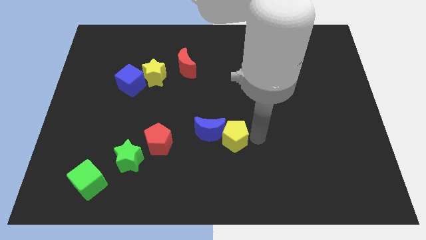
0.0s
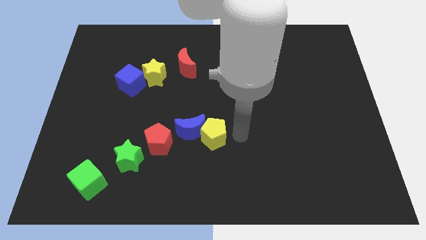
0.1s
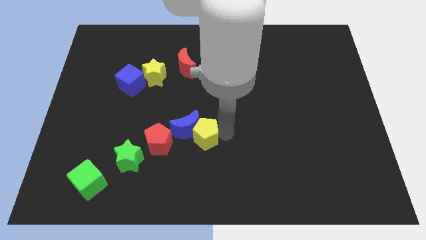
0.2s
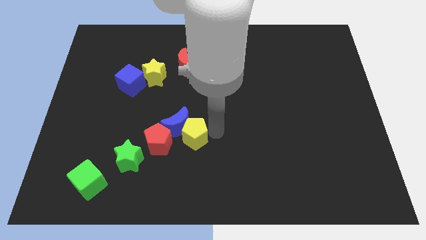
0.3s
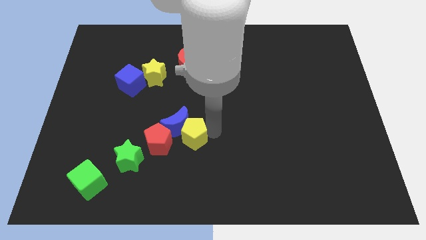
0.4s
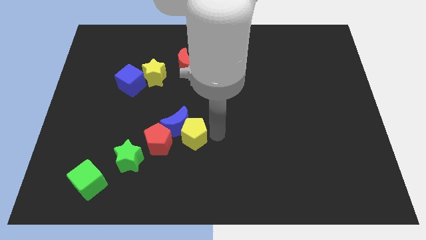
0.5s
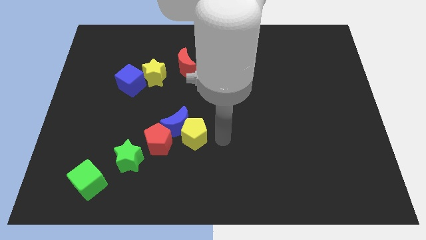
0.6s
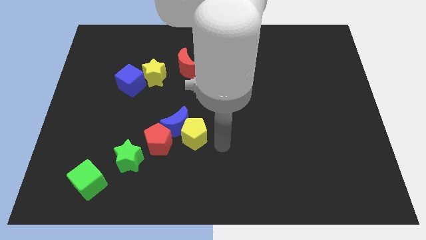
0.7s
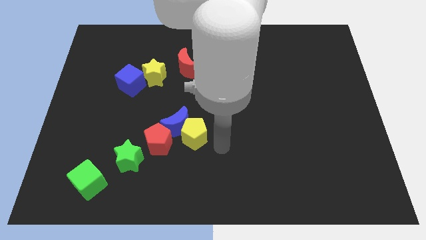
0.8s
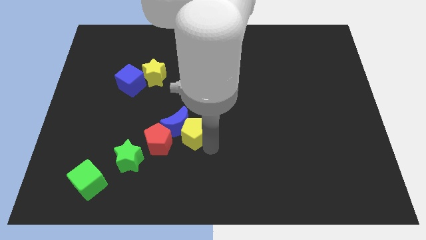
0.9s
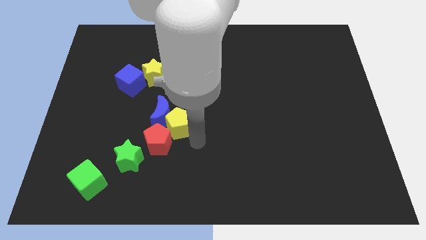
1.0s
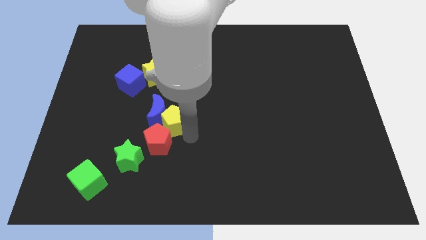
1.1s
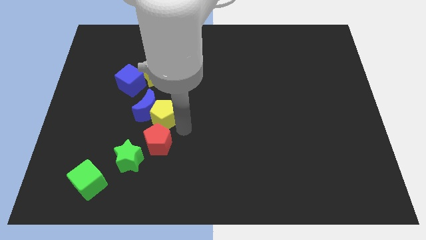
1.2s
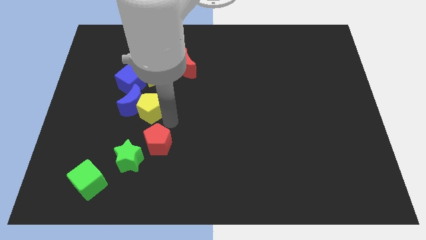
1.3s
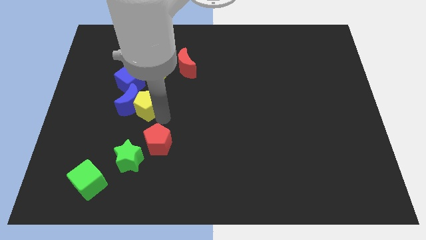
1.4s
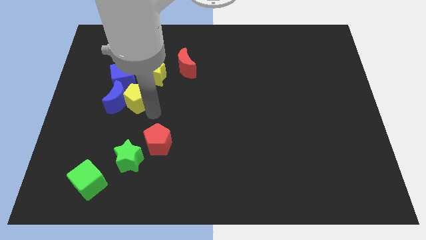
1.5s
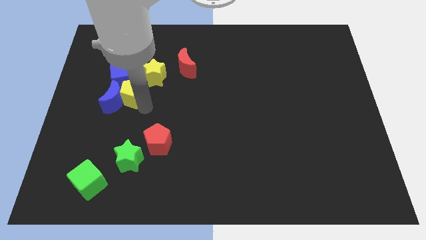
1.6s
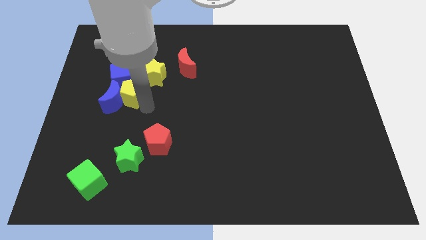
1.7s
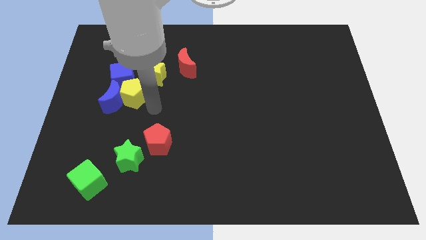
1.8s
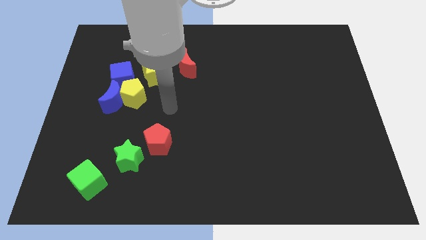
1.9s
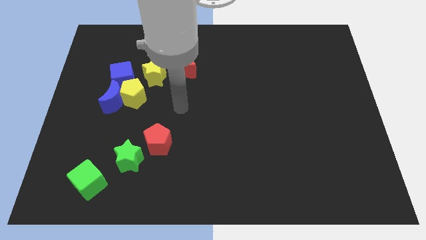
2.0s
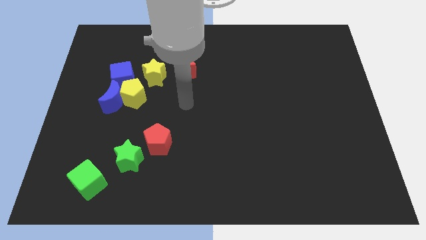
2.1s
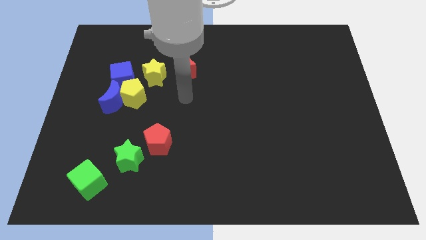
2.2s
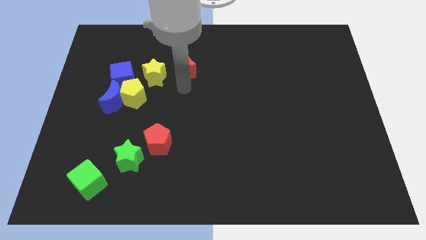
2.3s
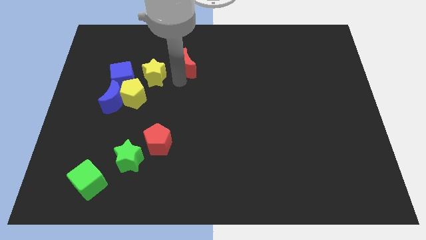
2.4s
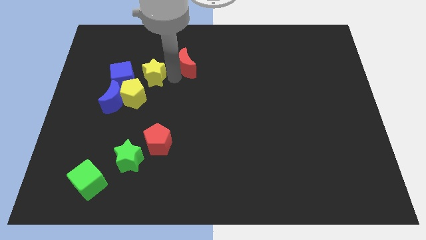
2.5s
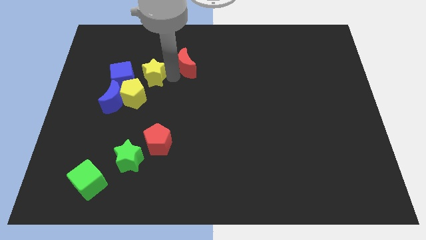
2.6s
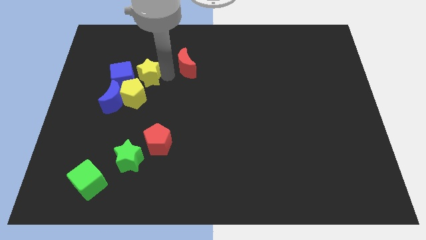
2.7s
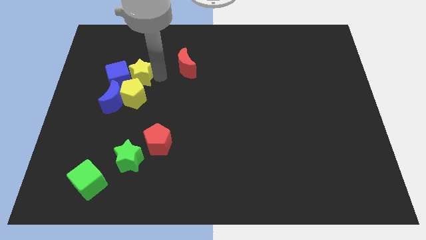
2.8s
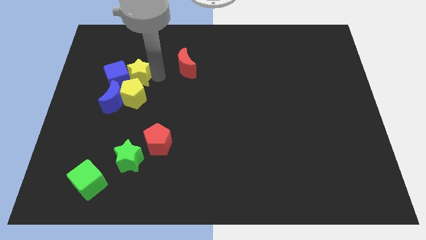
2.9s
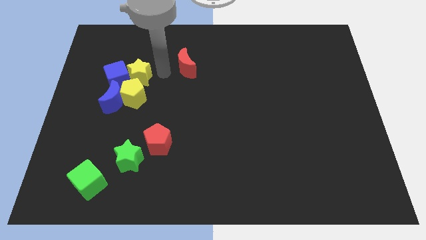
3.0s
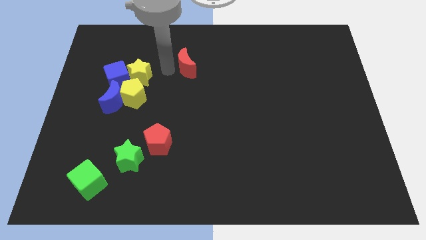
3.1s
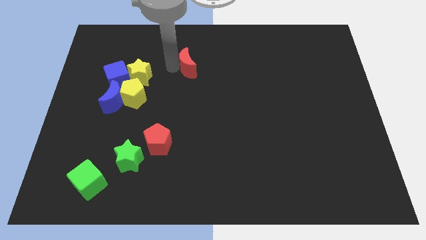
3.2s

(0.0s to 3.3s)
move the yellow and blue blocks to the left of the board

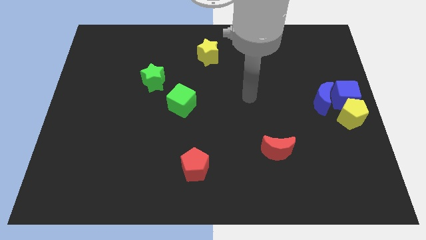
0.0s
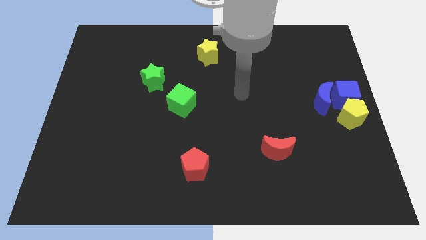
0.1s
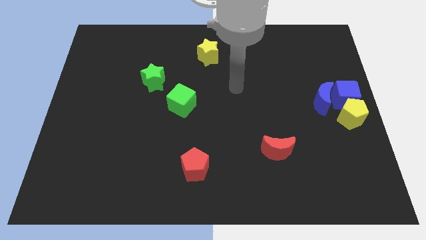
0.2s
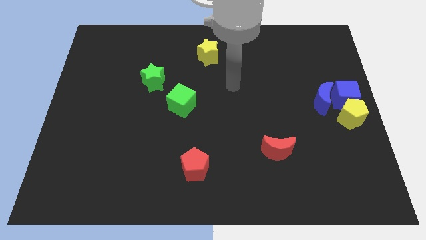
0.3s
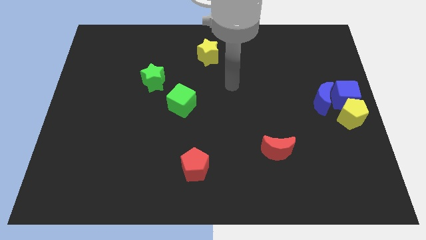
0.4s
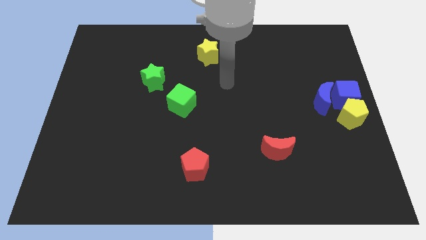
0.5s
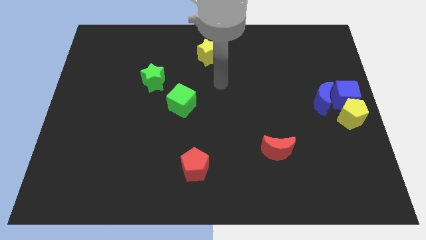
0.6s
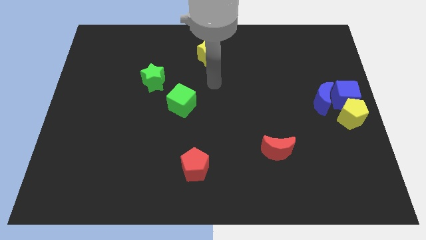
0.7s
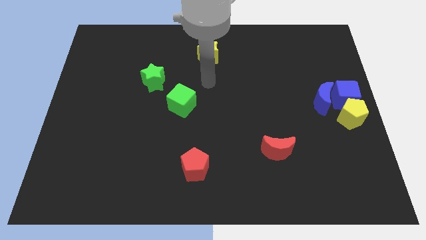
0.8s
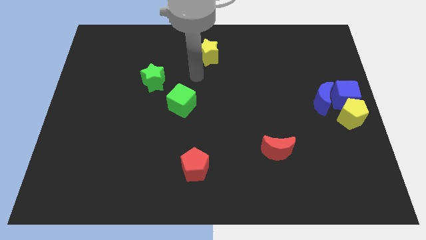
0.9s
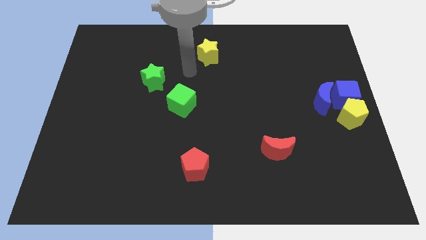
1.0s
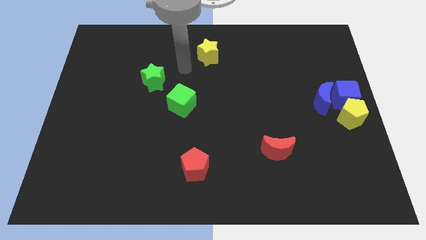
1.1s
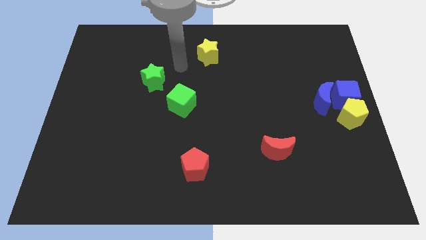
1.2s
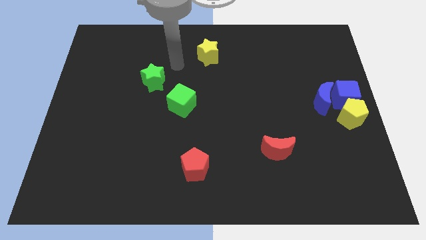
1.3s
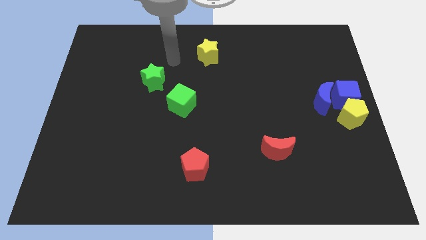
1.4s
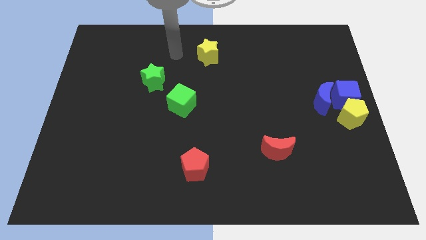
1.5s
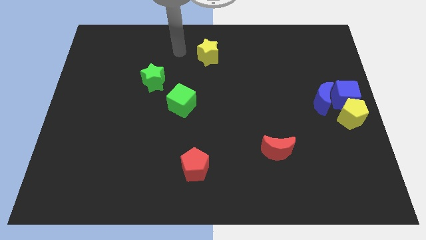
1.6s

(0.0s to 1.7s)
move your arm to the top of the board

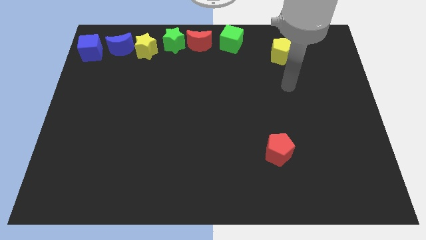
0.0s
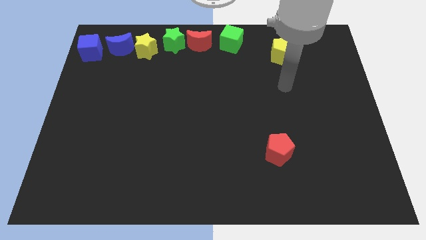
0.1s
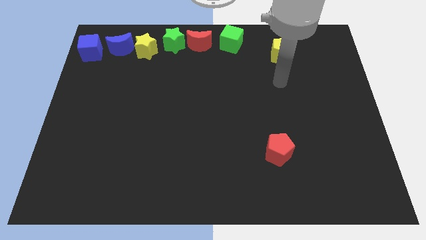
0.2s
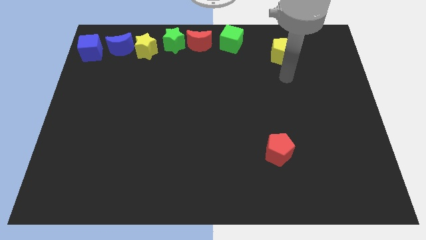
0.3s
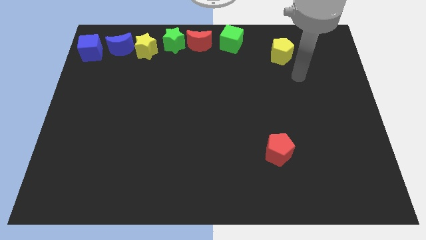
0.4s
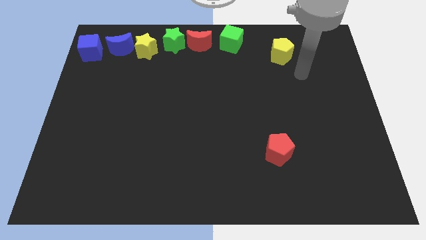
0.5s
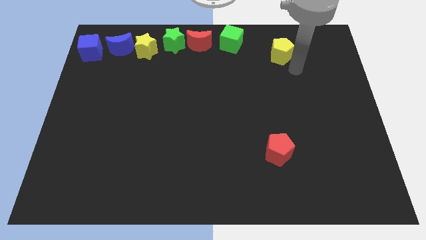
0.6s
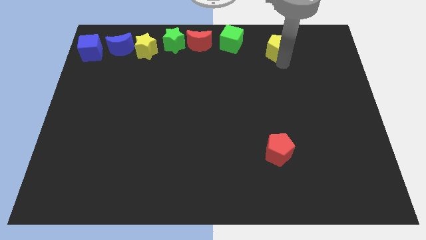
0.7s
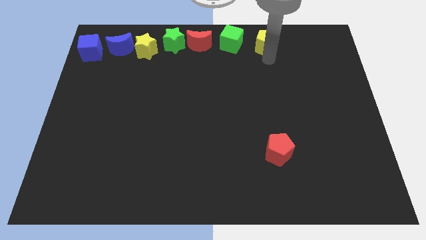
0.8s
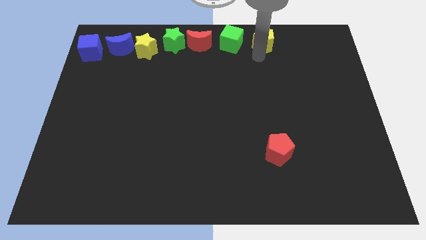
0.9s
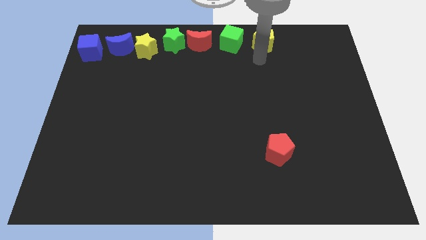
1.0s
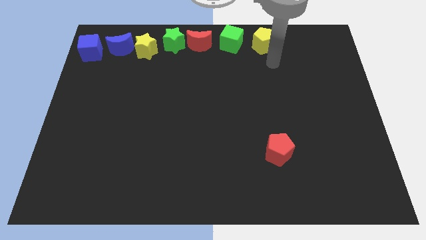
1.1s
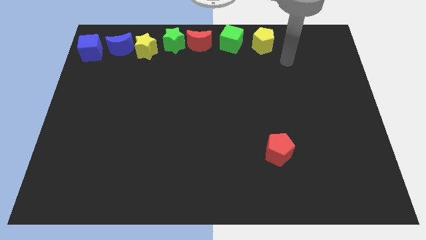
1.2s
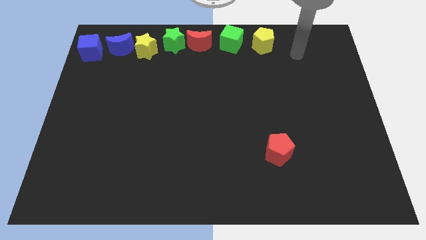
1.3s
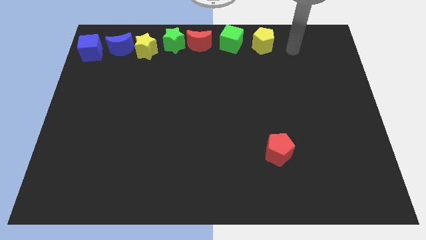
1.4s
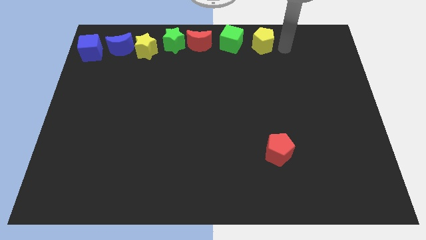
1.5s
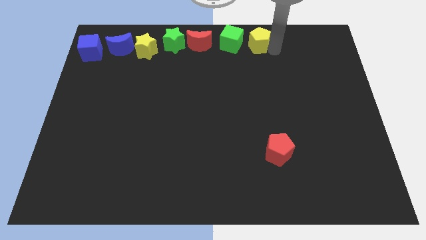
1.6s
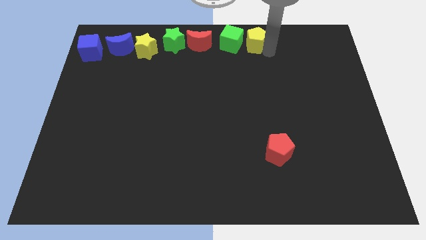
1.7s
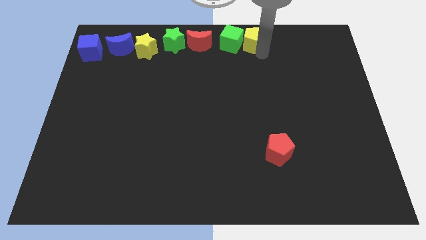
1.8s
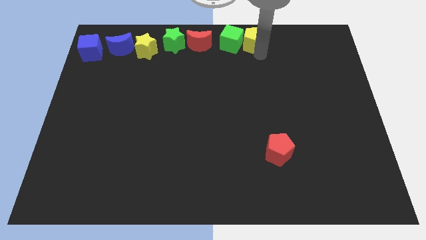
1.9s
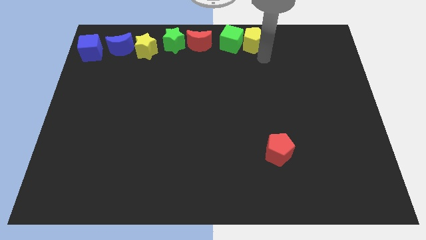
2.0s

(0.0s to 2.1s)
push the yellow pentagon close to the green cube

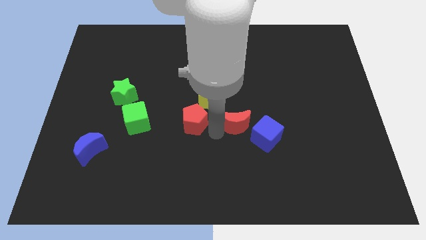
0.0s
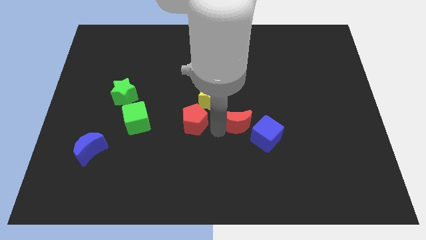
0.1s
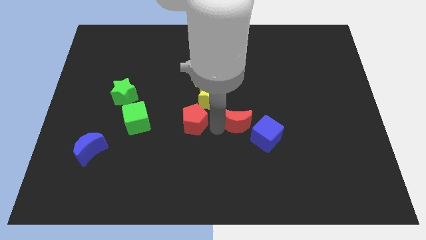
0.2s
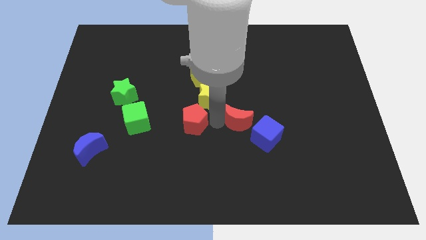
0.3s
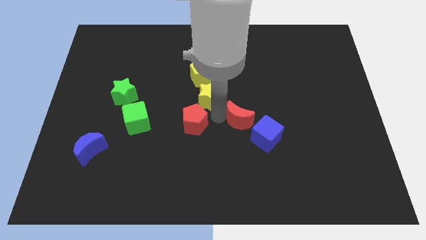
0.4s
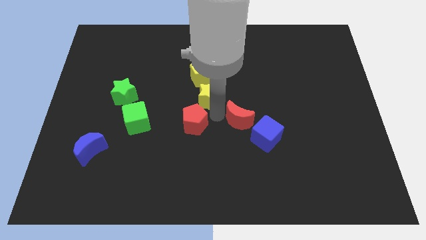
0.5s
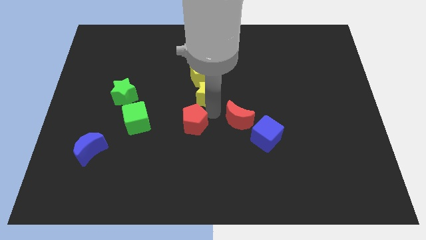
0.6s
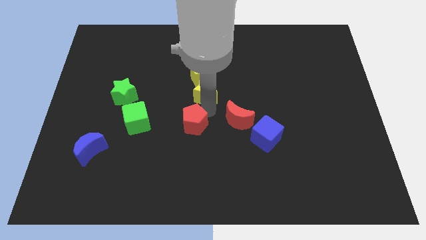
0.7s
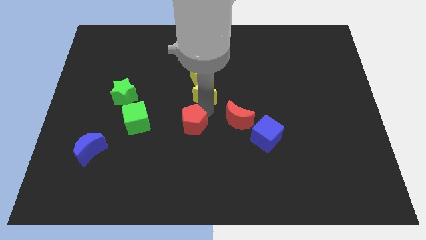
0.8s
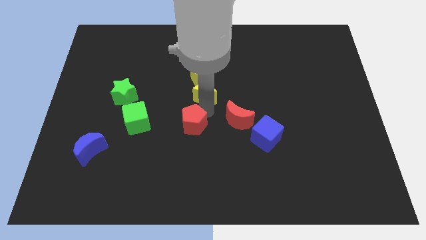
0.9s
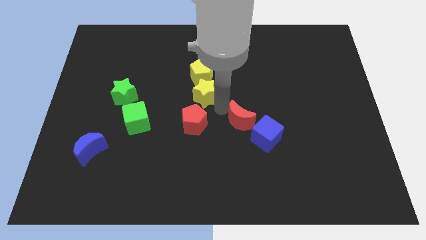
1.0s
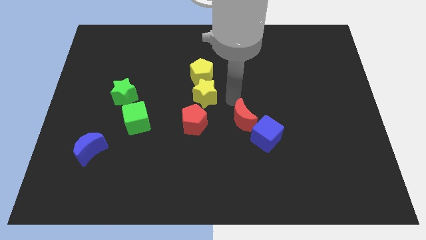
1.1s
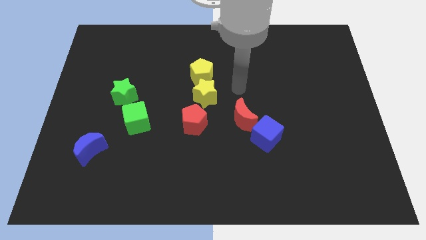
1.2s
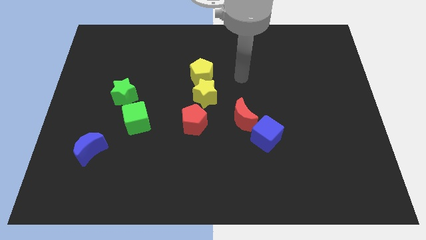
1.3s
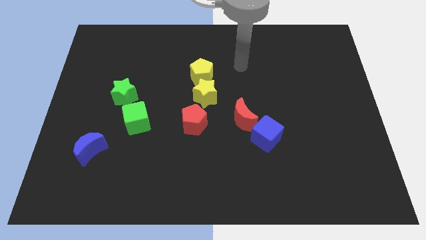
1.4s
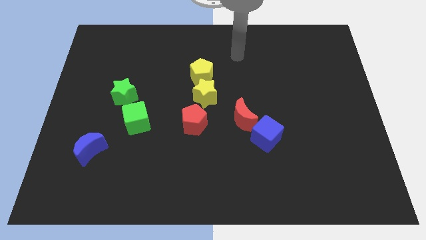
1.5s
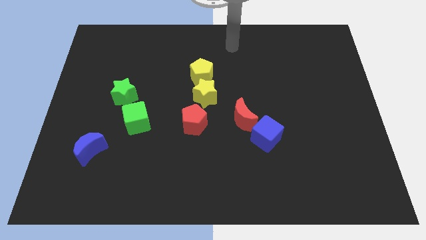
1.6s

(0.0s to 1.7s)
separate yellow pentagon and red moon

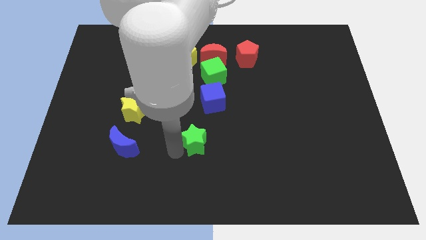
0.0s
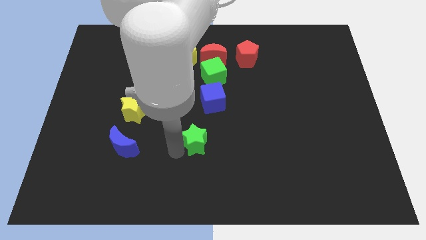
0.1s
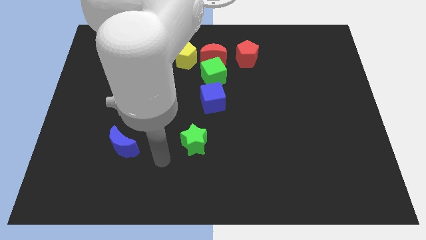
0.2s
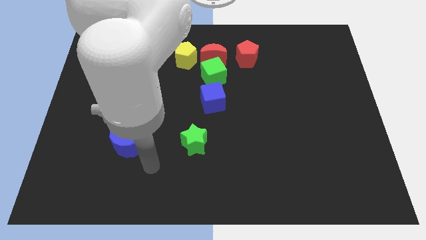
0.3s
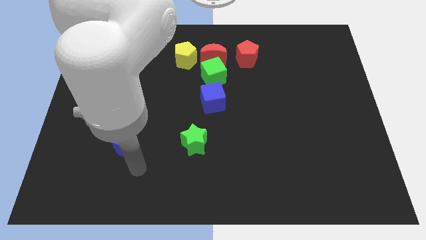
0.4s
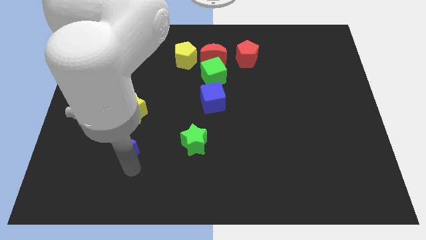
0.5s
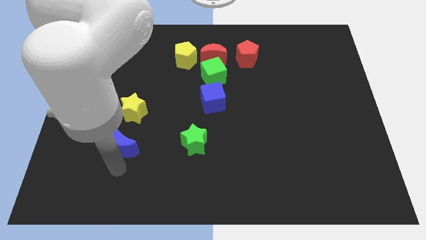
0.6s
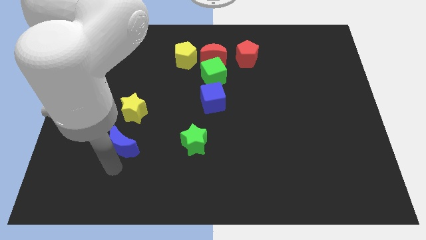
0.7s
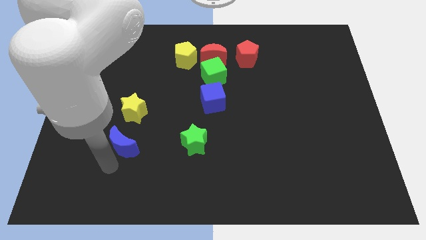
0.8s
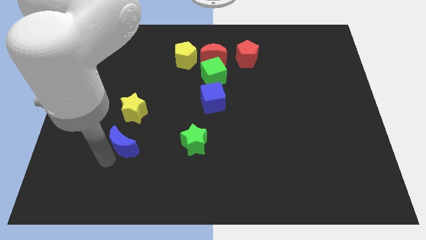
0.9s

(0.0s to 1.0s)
move the arm away from green star
